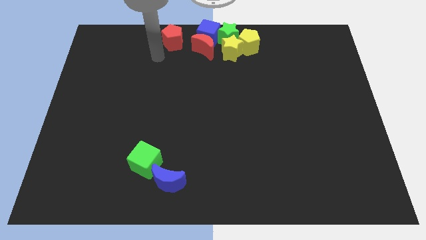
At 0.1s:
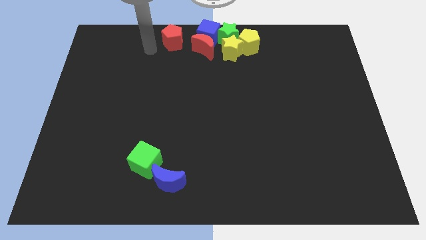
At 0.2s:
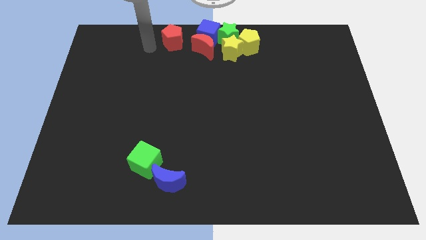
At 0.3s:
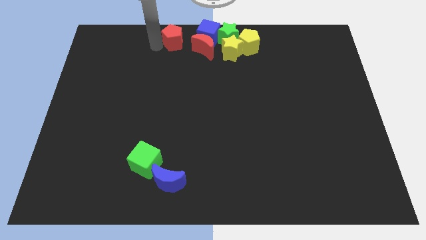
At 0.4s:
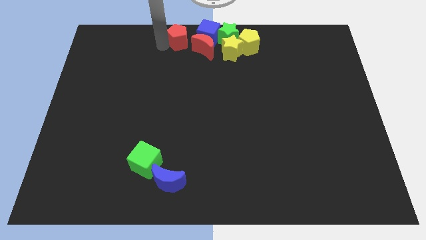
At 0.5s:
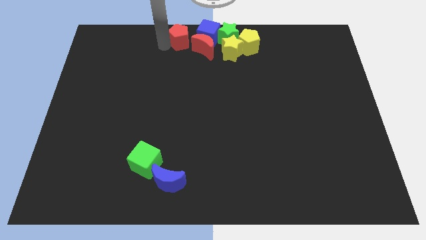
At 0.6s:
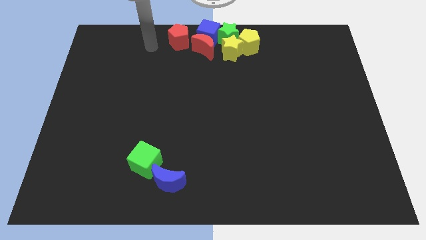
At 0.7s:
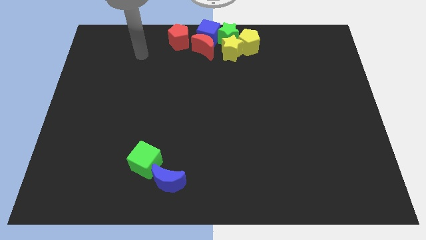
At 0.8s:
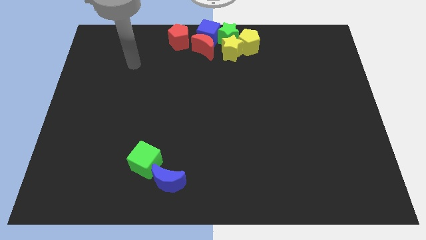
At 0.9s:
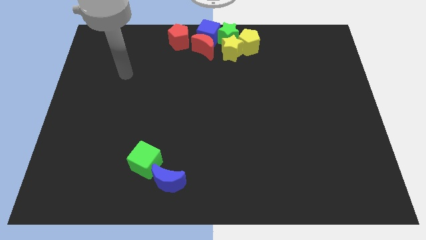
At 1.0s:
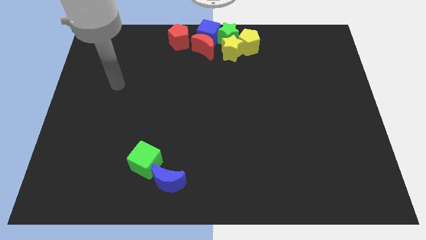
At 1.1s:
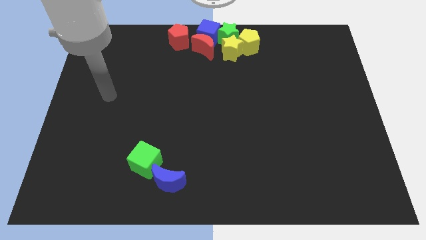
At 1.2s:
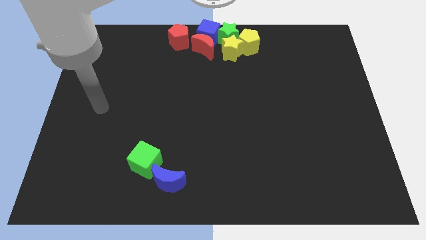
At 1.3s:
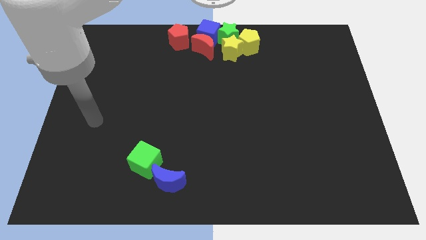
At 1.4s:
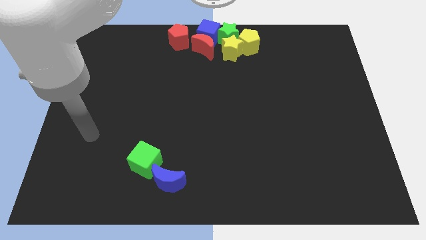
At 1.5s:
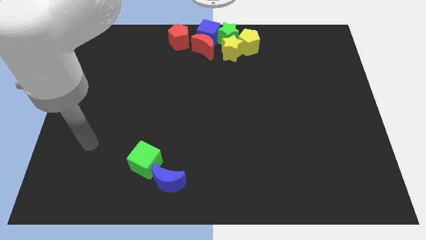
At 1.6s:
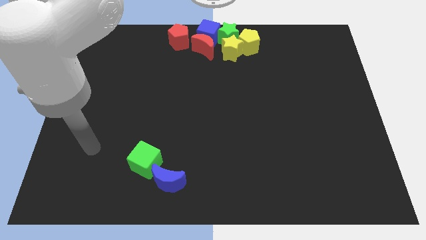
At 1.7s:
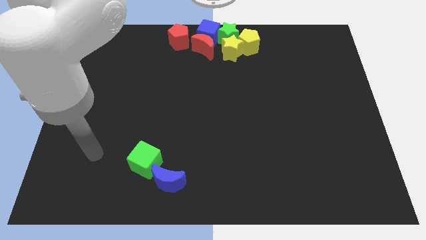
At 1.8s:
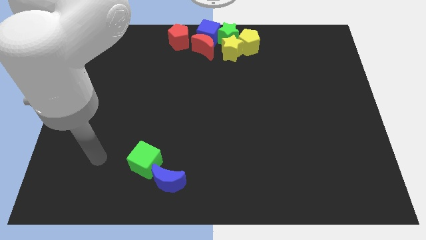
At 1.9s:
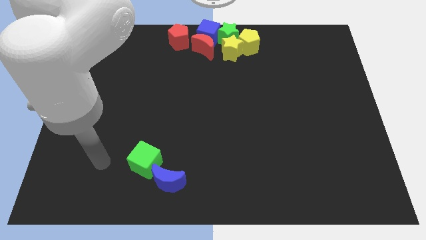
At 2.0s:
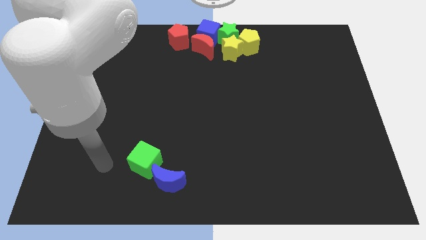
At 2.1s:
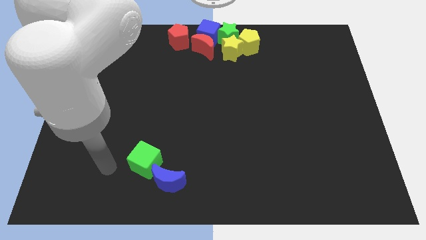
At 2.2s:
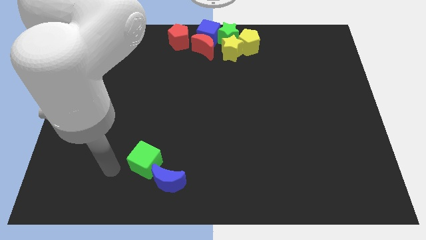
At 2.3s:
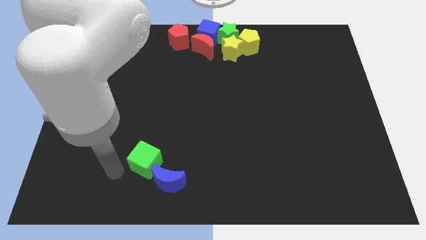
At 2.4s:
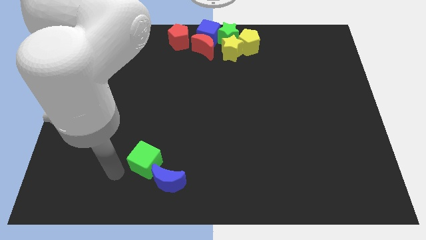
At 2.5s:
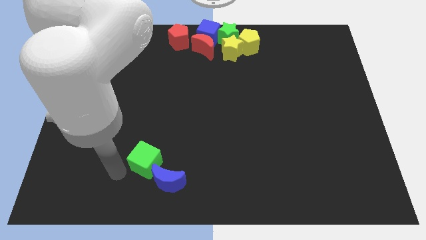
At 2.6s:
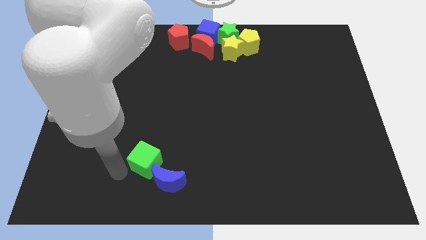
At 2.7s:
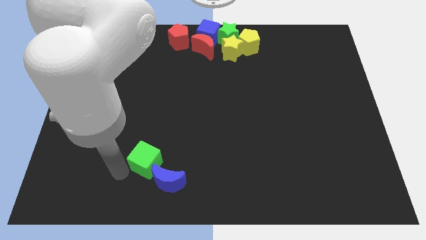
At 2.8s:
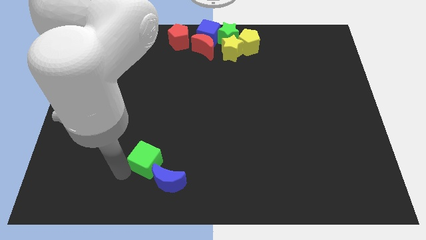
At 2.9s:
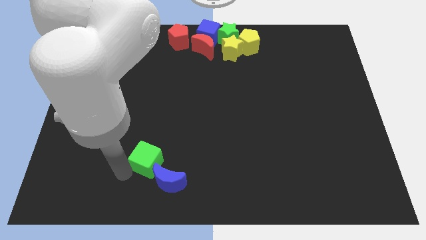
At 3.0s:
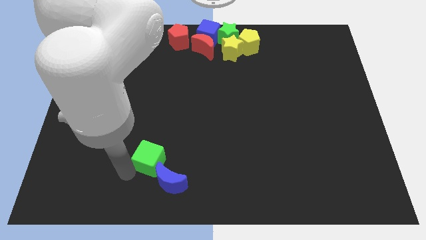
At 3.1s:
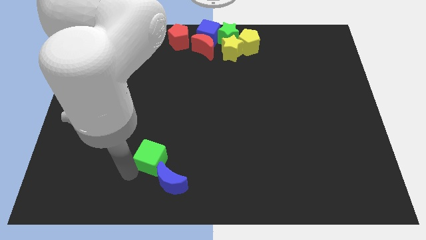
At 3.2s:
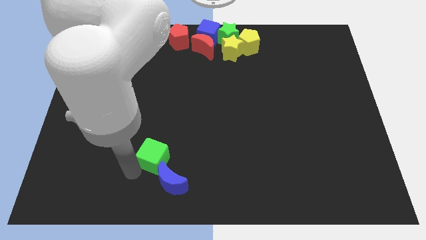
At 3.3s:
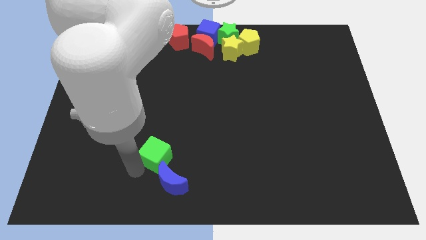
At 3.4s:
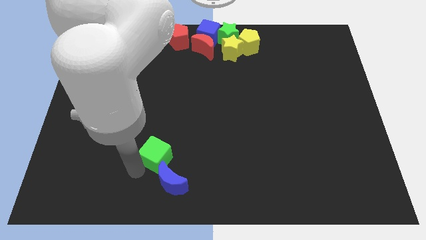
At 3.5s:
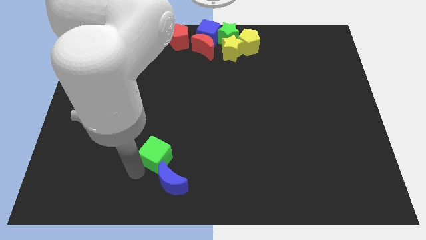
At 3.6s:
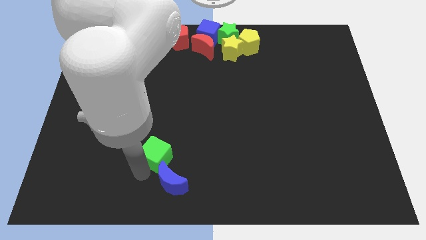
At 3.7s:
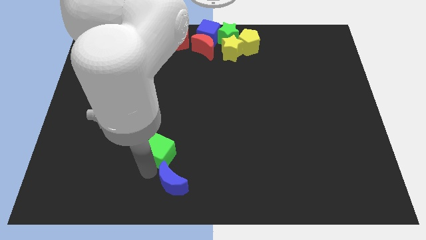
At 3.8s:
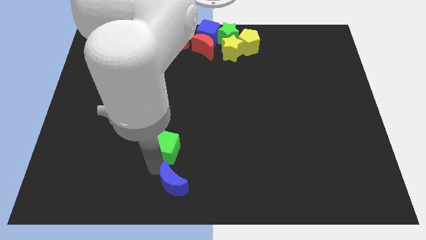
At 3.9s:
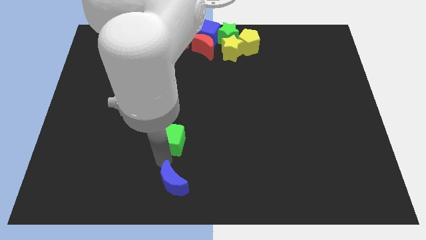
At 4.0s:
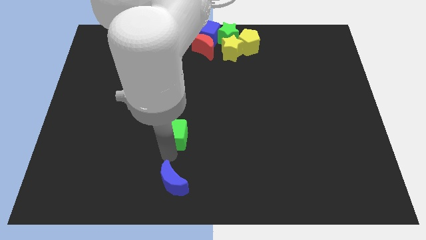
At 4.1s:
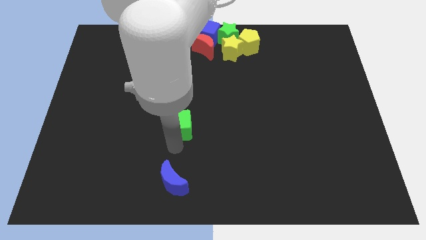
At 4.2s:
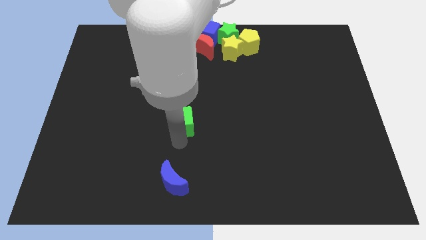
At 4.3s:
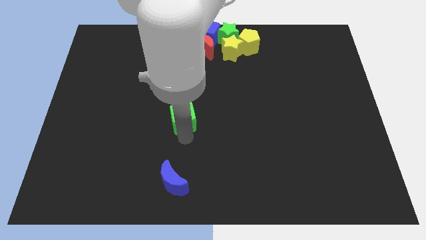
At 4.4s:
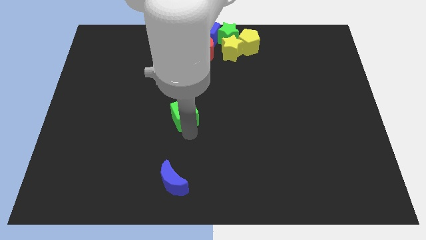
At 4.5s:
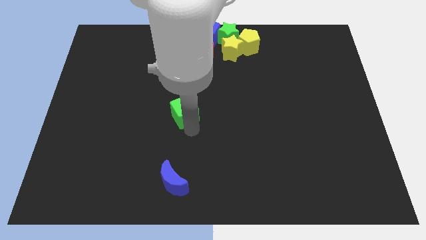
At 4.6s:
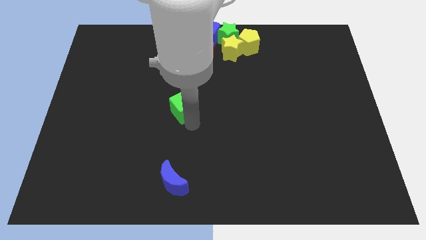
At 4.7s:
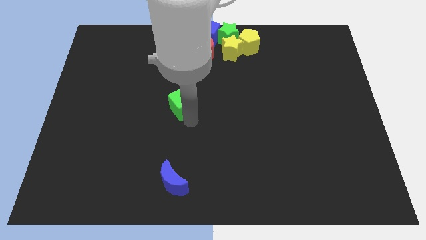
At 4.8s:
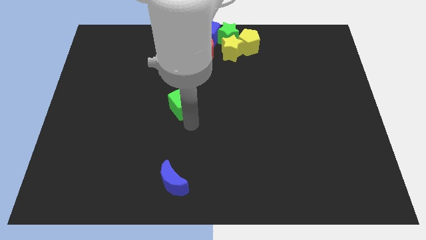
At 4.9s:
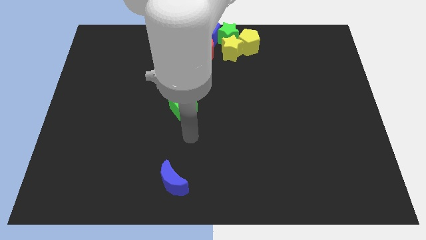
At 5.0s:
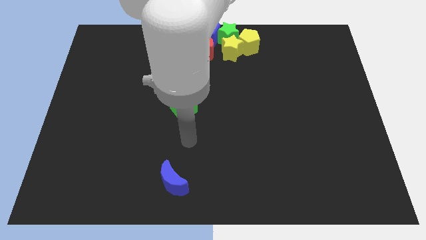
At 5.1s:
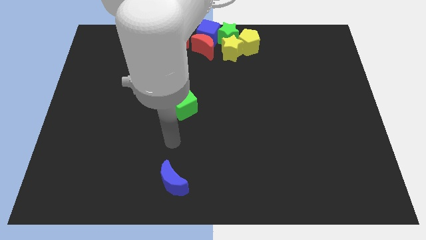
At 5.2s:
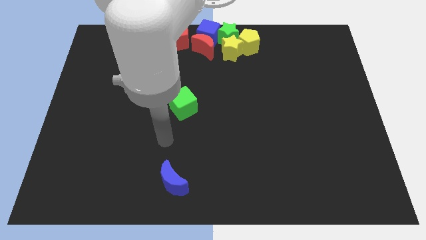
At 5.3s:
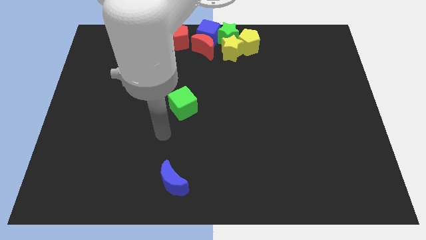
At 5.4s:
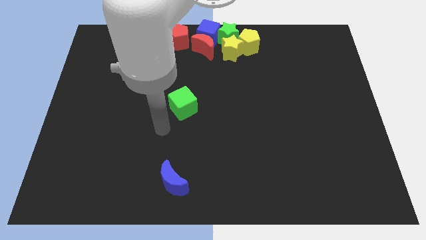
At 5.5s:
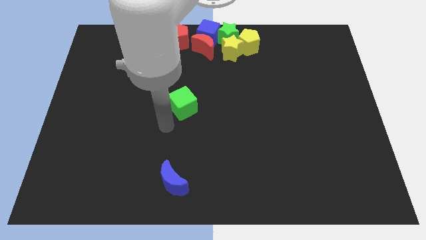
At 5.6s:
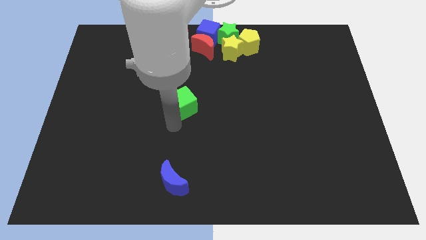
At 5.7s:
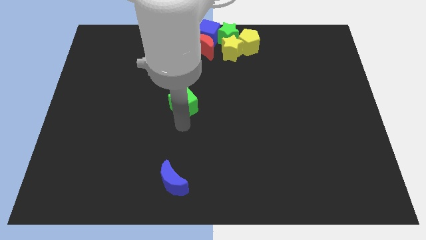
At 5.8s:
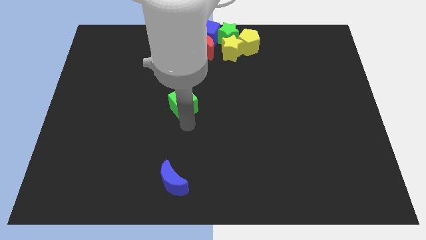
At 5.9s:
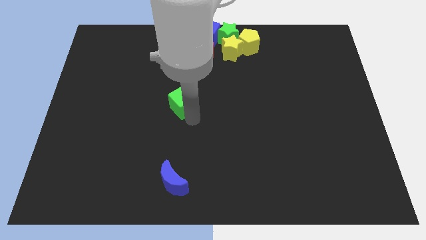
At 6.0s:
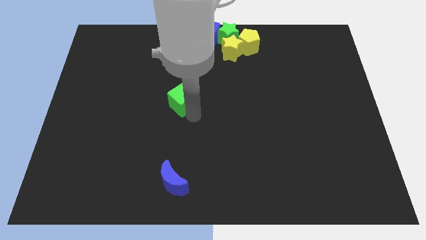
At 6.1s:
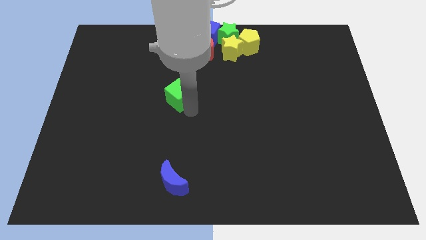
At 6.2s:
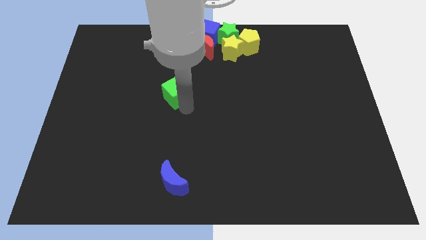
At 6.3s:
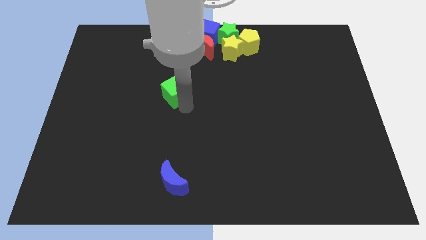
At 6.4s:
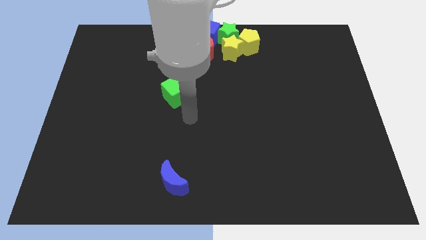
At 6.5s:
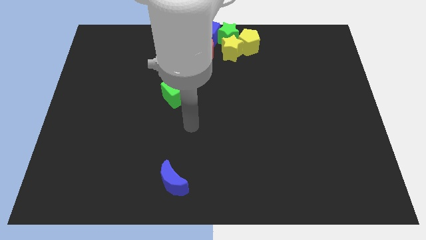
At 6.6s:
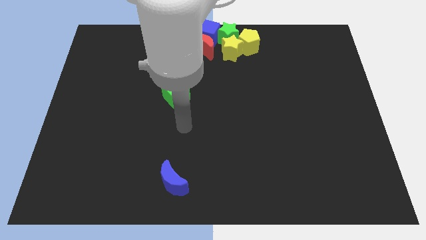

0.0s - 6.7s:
separate the green cube from the blue crescent

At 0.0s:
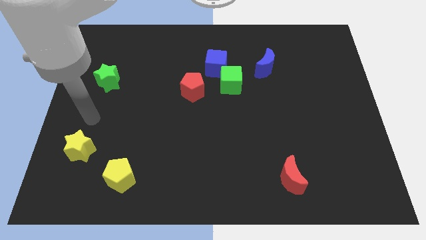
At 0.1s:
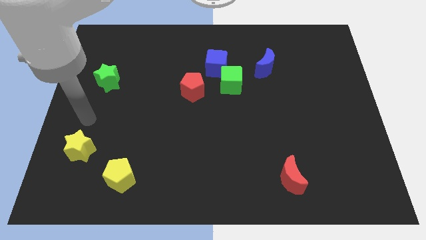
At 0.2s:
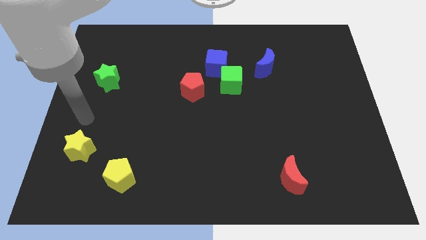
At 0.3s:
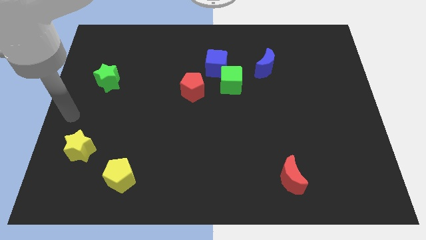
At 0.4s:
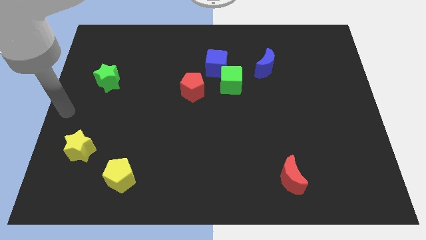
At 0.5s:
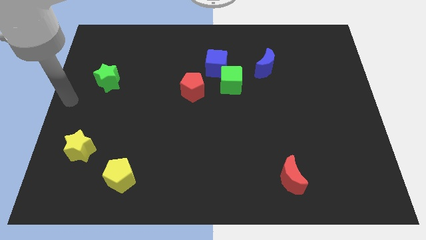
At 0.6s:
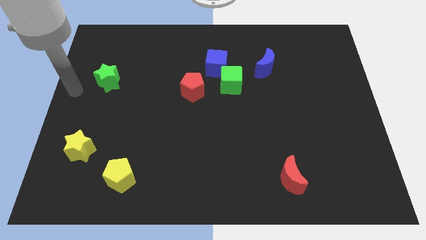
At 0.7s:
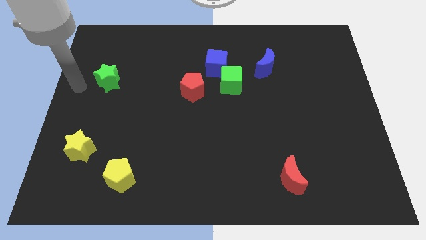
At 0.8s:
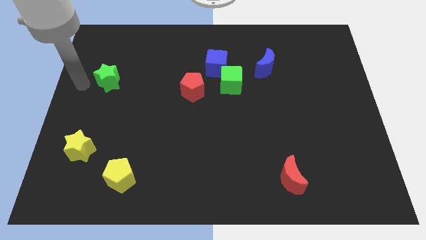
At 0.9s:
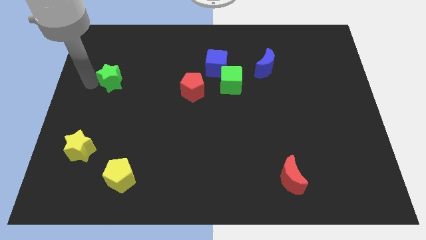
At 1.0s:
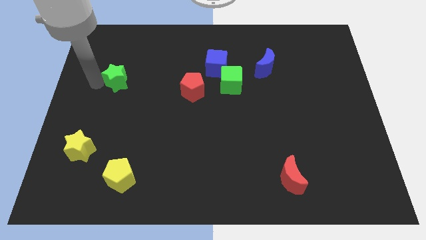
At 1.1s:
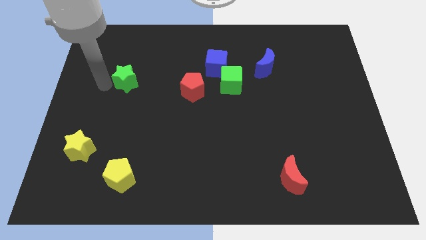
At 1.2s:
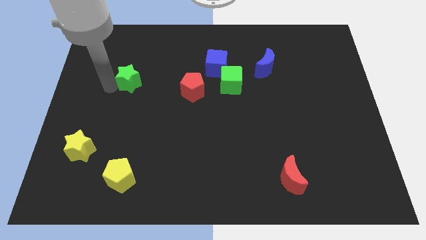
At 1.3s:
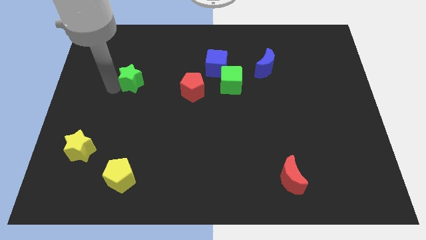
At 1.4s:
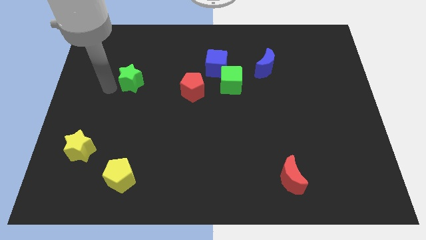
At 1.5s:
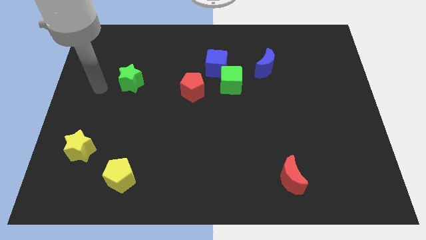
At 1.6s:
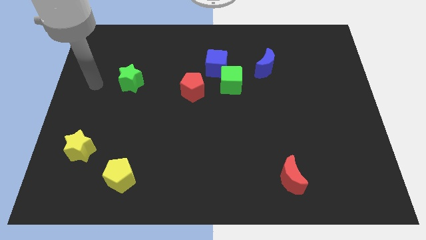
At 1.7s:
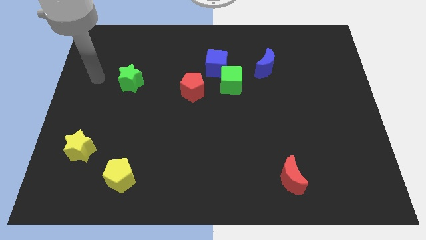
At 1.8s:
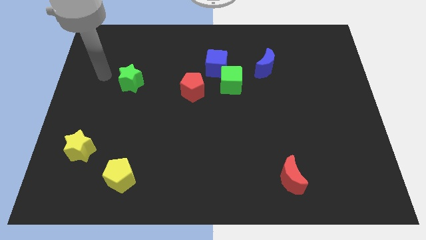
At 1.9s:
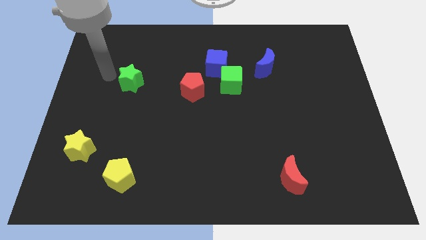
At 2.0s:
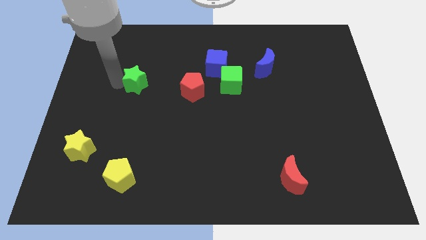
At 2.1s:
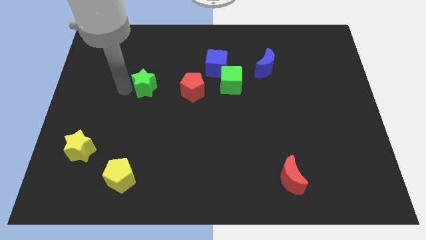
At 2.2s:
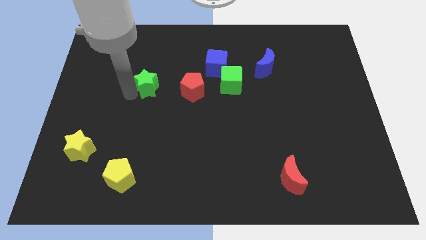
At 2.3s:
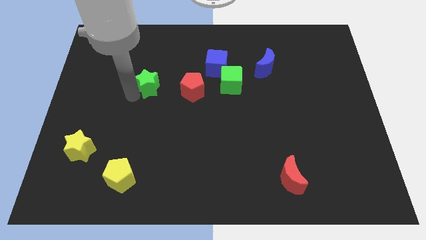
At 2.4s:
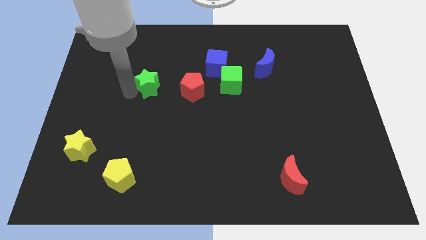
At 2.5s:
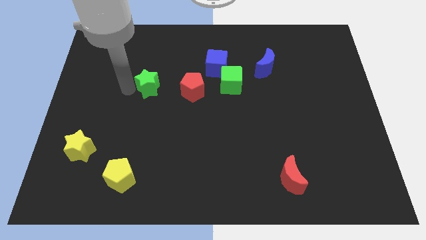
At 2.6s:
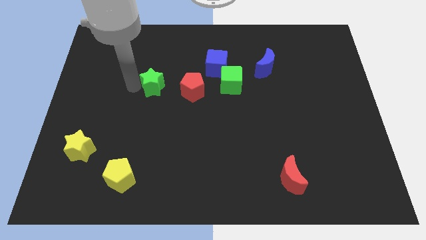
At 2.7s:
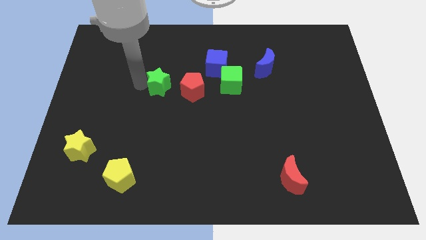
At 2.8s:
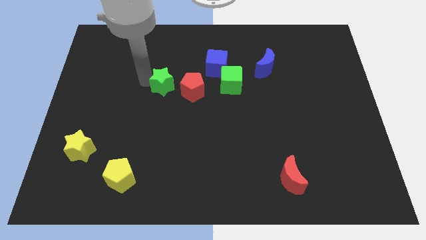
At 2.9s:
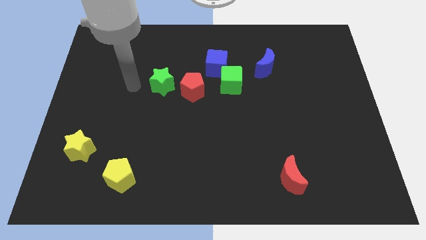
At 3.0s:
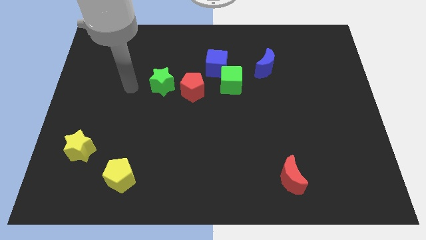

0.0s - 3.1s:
slide green star towards red pentagon
